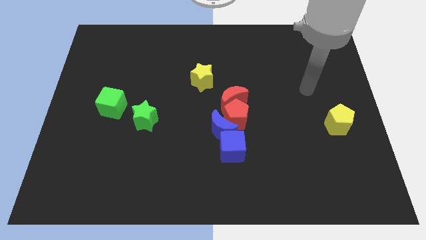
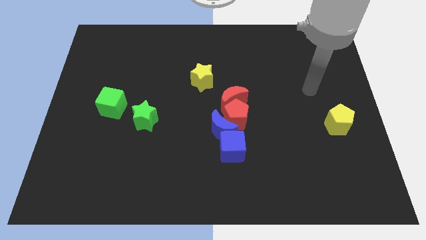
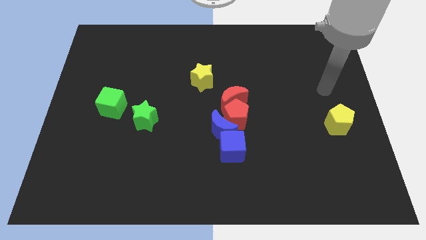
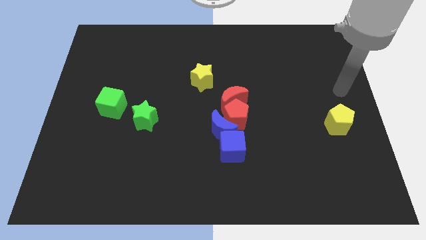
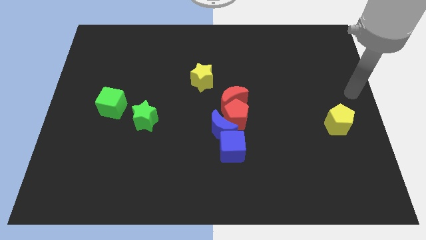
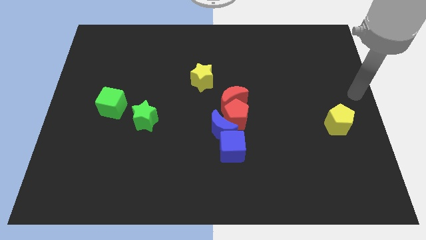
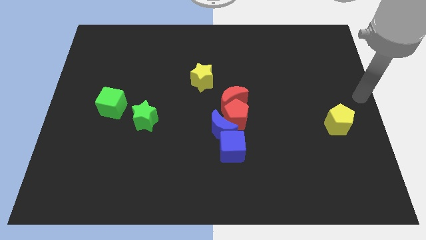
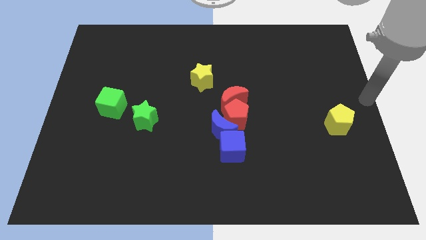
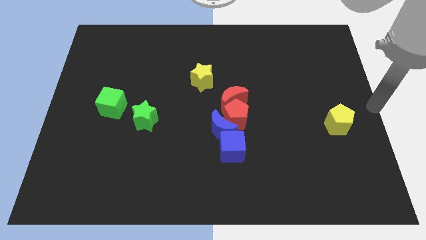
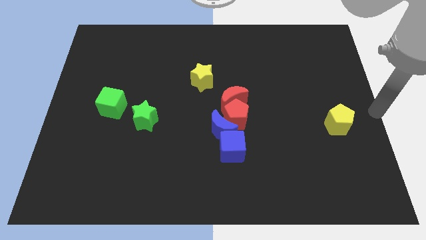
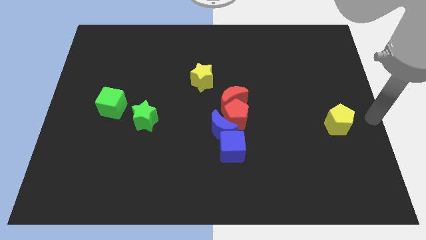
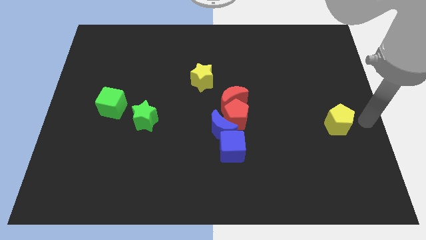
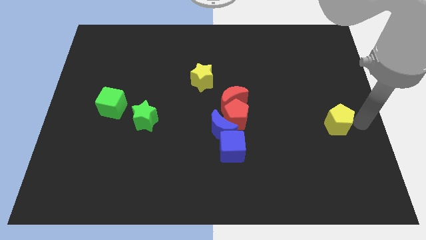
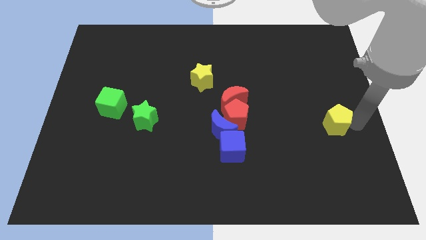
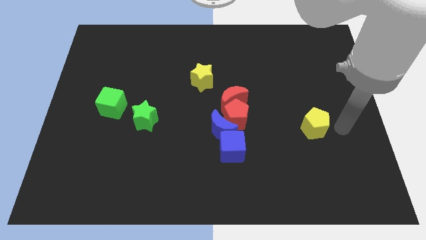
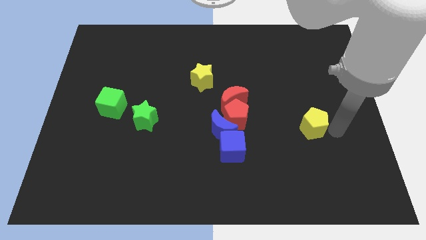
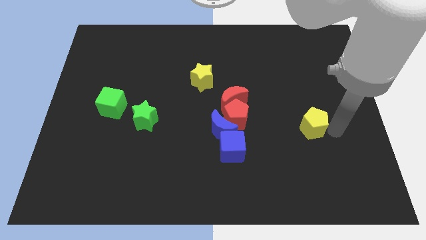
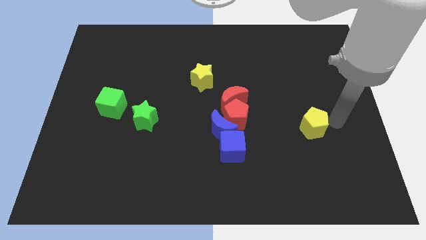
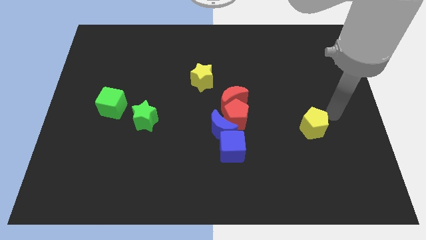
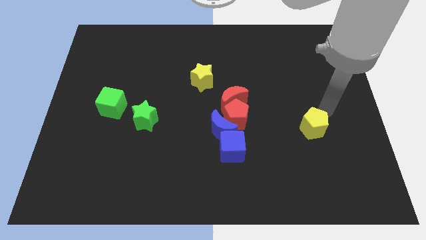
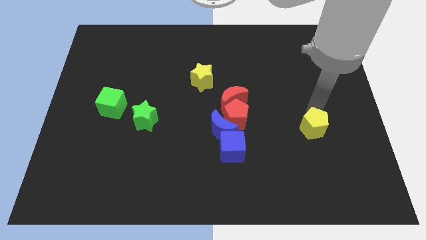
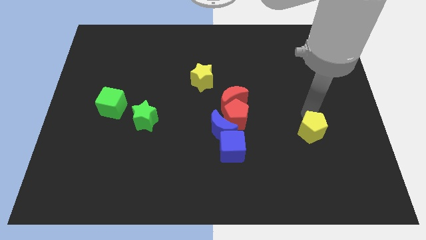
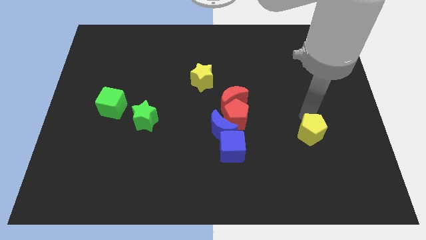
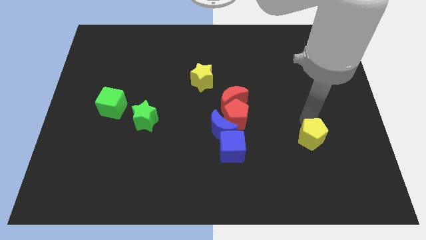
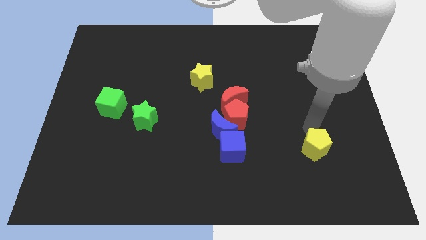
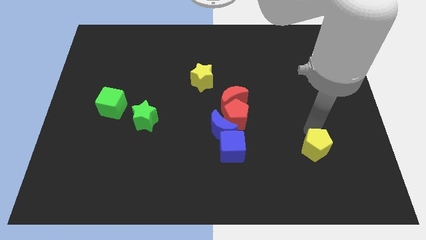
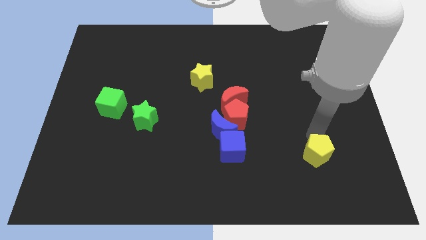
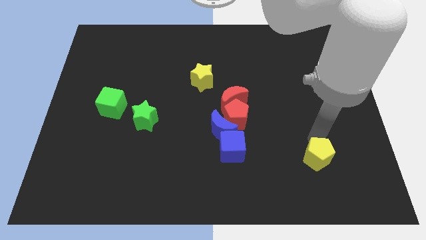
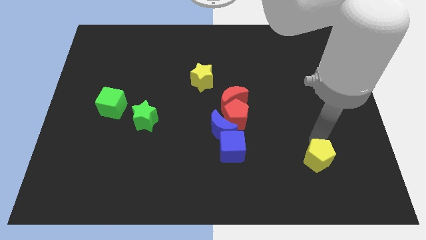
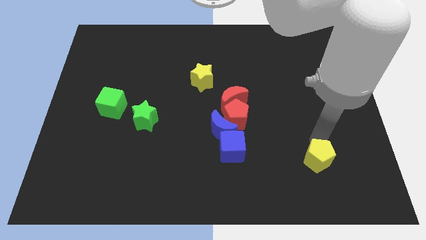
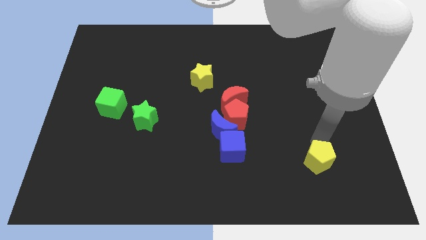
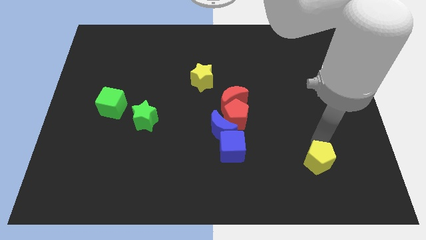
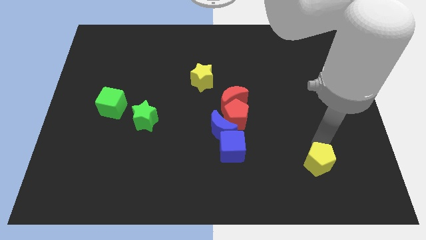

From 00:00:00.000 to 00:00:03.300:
push the yellow pentagon to the right of the blue cube

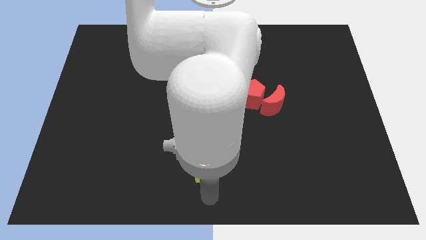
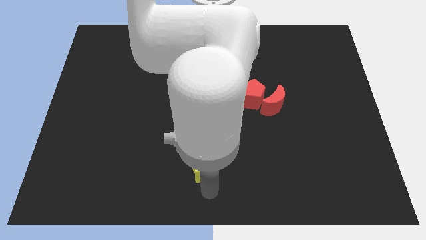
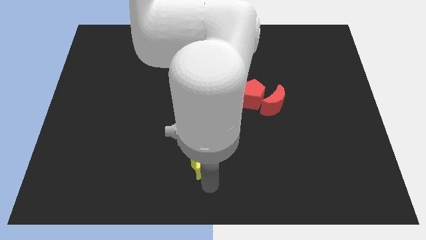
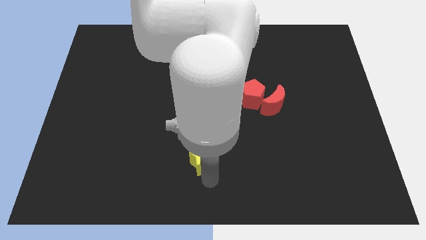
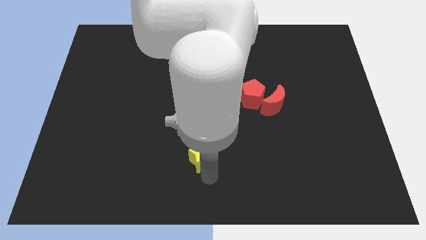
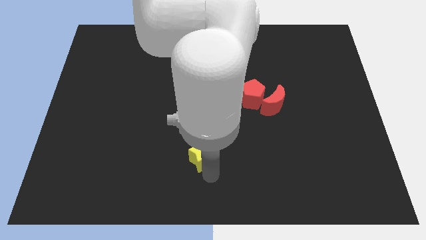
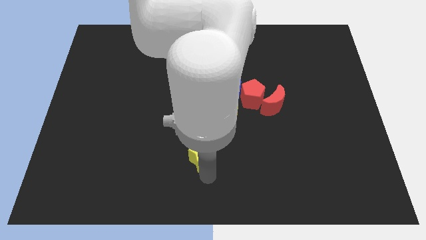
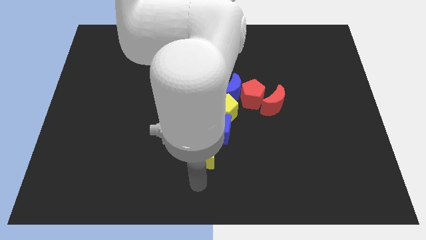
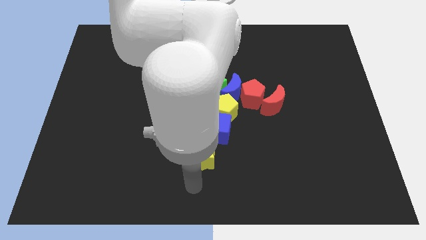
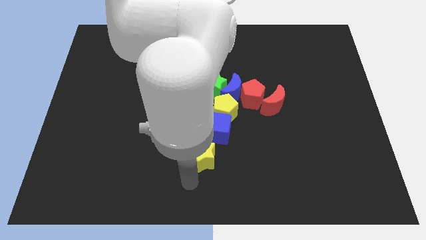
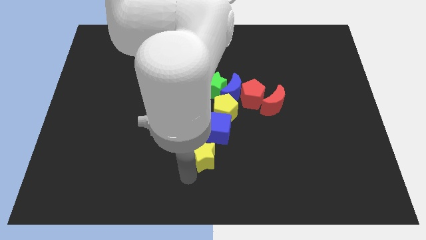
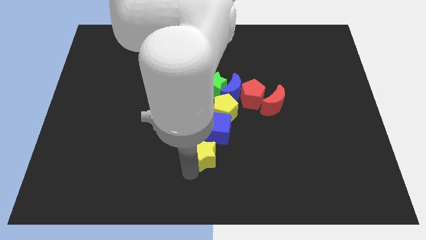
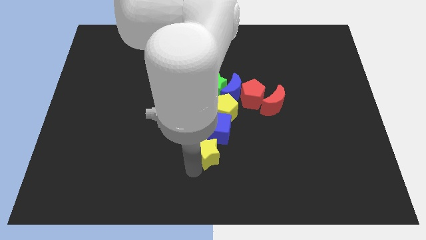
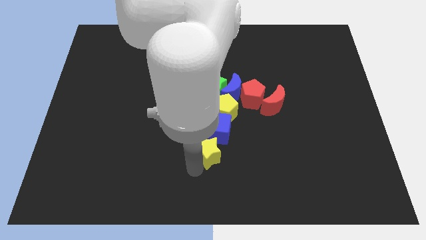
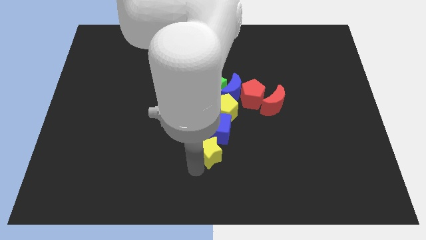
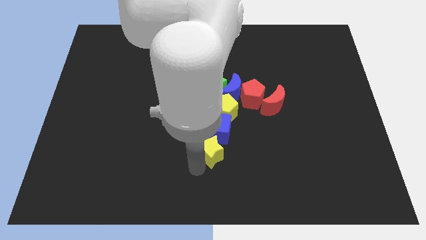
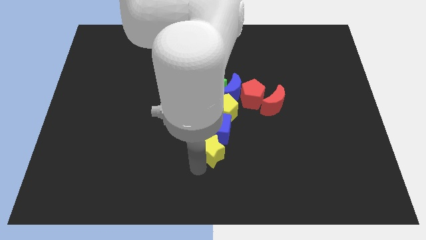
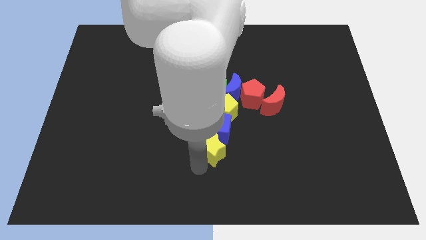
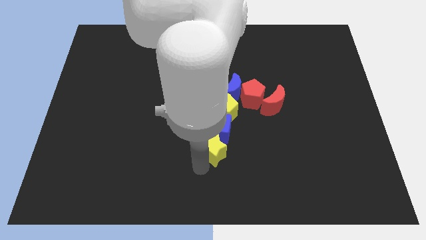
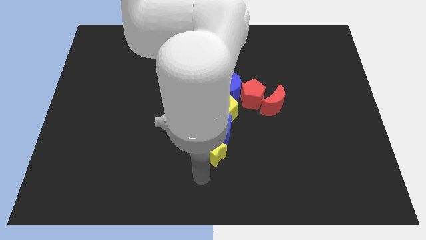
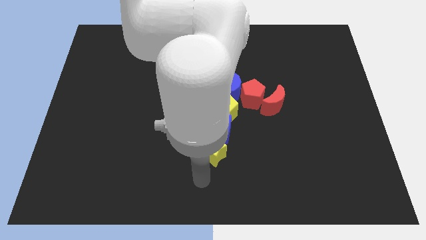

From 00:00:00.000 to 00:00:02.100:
push the yellow star into the blue cube

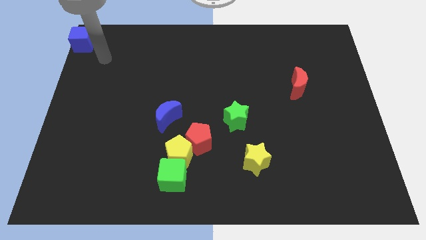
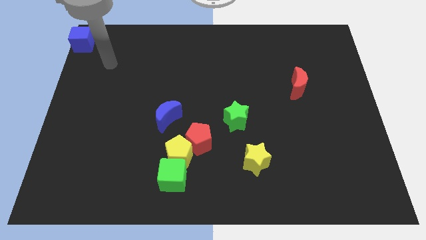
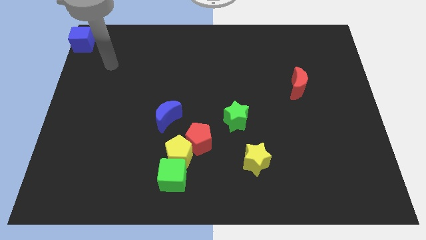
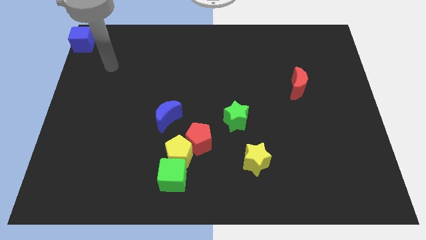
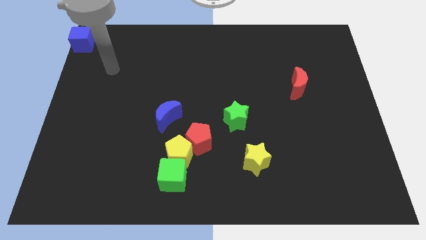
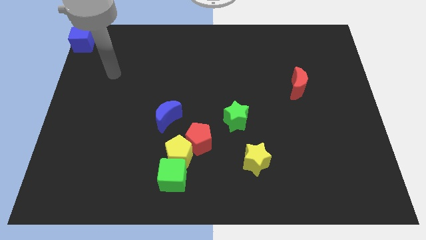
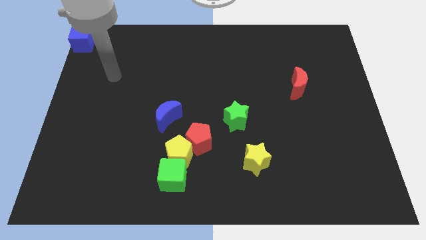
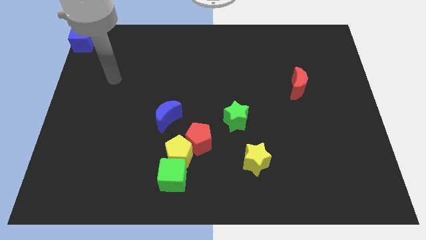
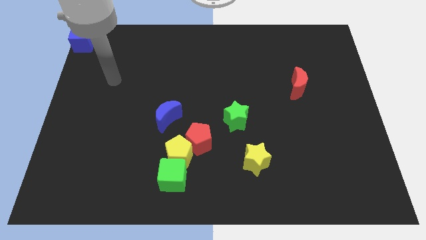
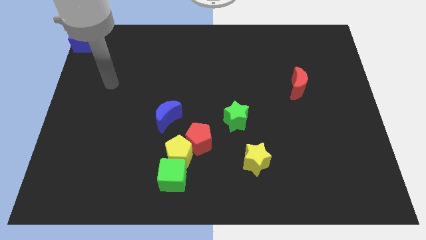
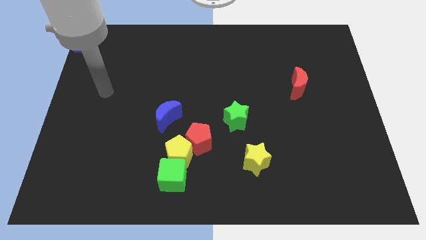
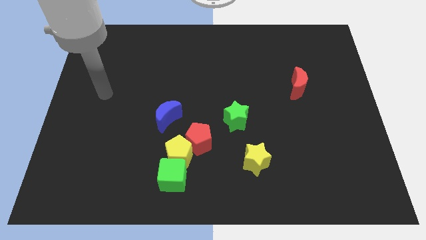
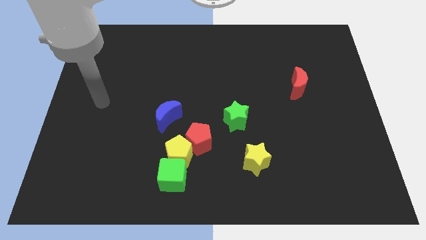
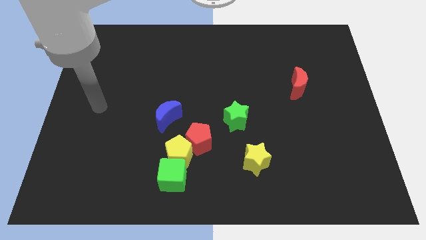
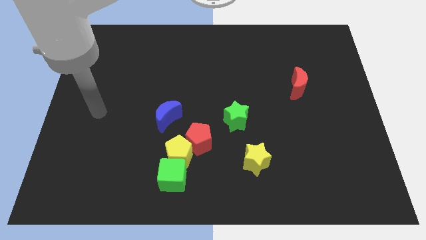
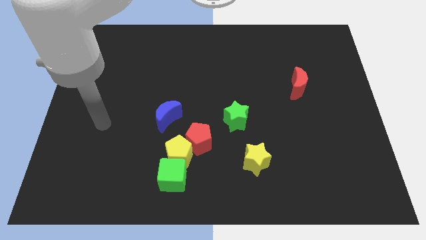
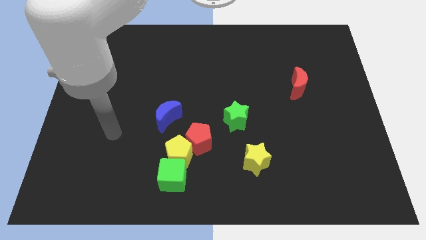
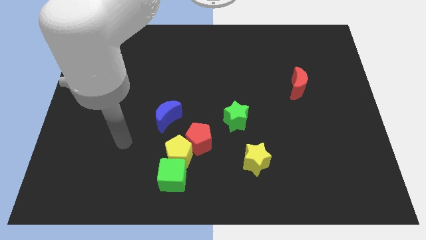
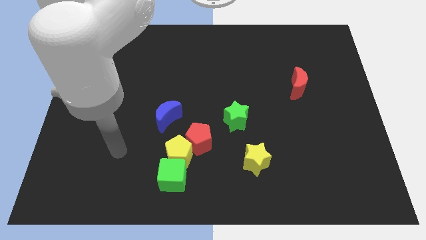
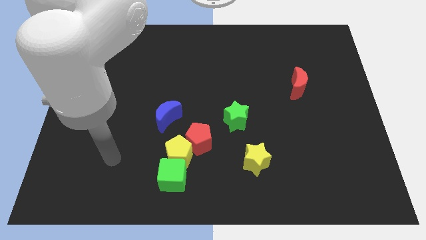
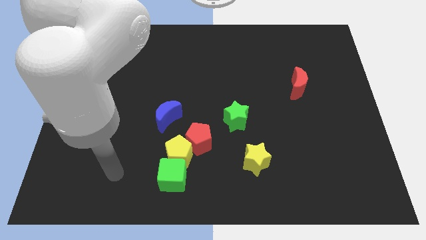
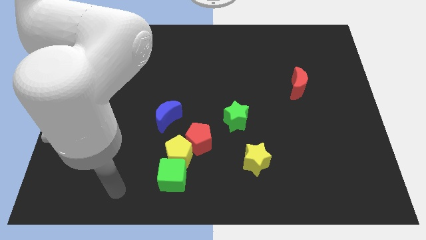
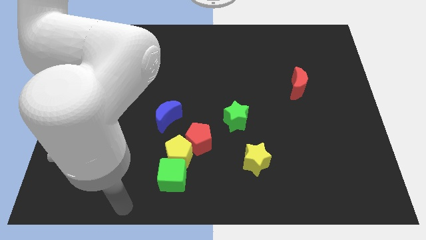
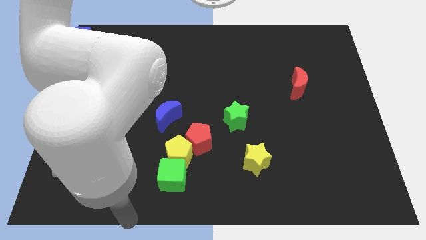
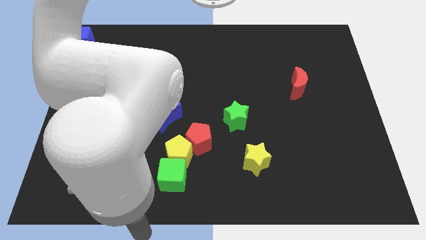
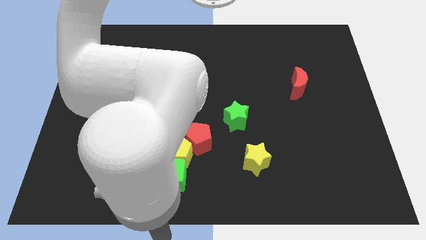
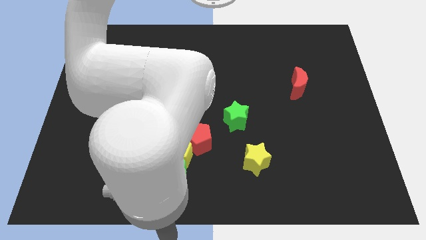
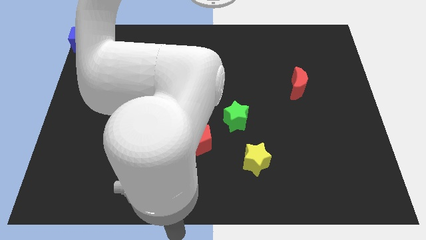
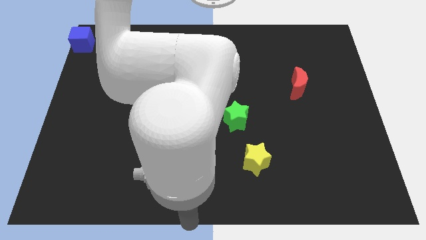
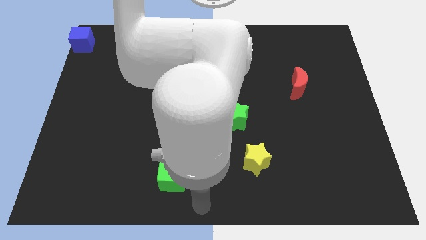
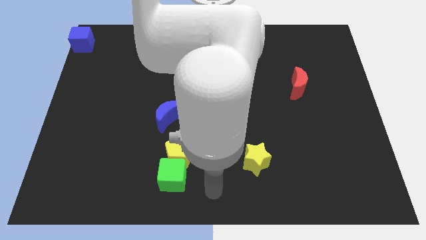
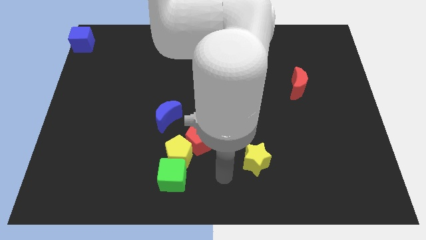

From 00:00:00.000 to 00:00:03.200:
place your hand in between the green cube and yellow star

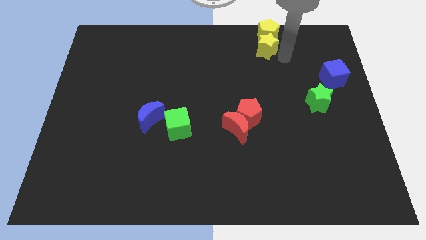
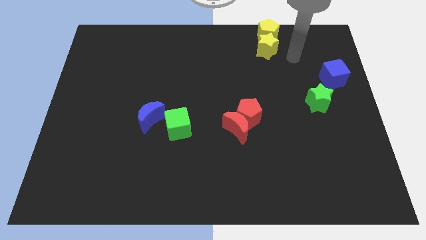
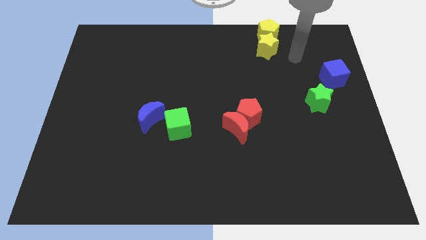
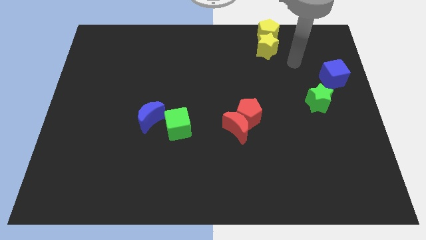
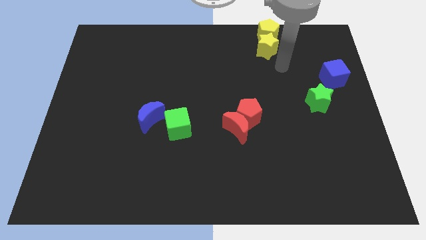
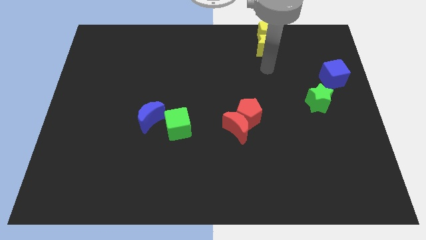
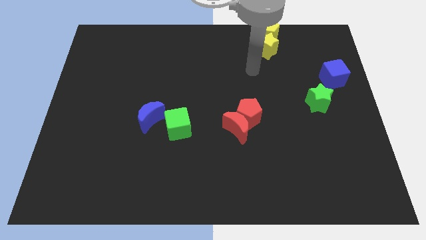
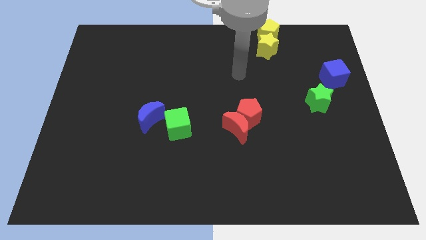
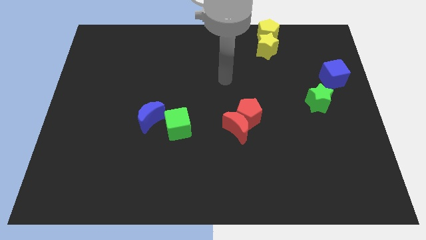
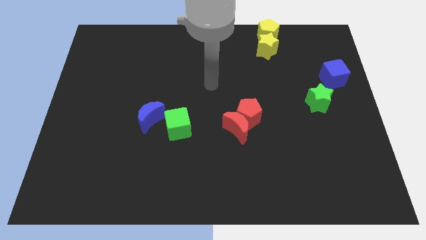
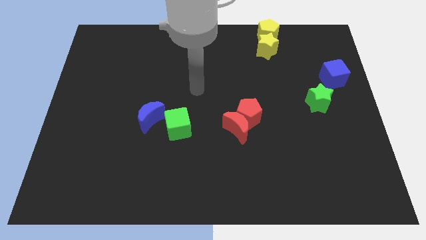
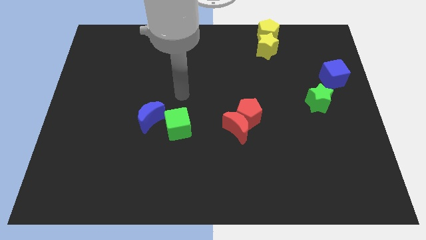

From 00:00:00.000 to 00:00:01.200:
move your arm away from the yellow blocks
